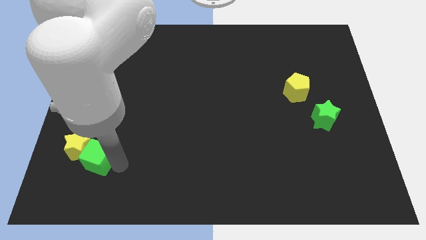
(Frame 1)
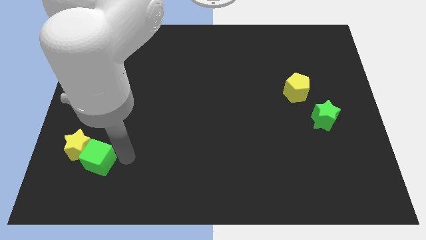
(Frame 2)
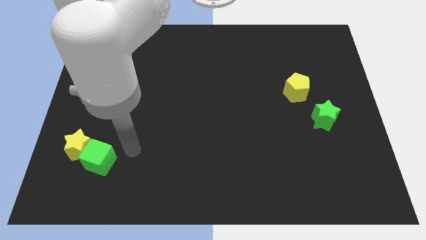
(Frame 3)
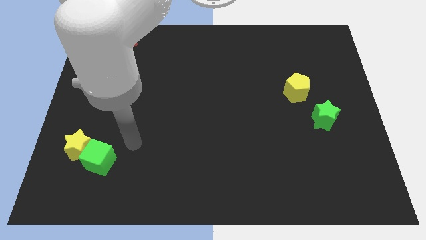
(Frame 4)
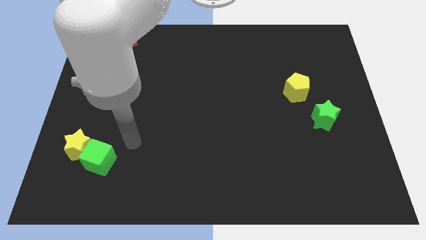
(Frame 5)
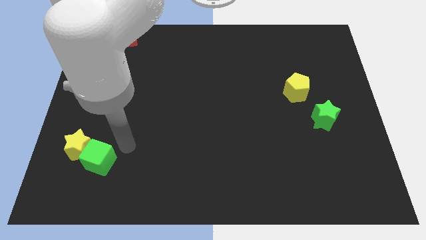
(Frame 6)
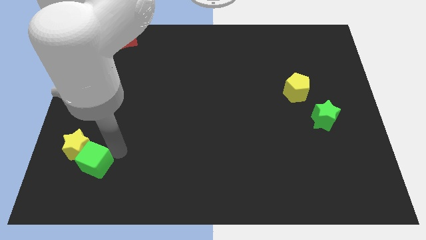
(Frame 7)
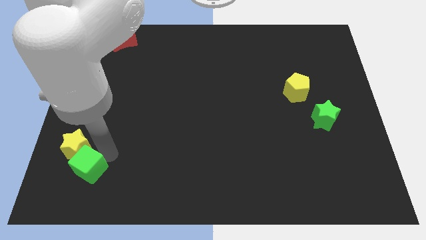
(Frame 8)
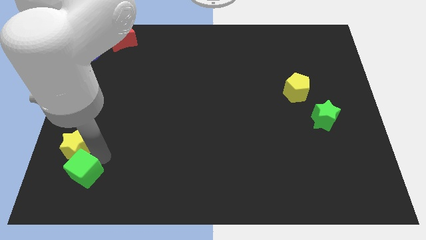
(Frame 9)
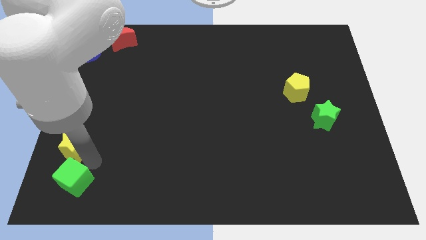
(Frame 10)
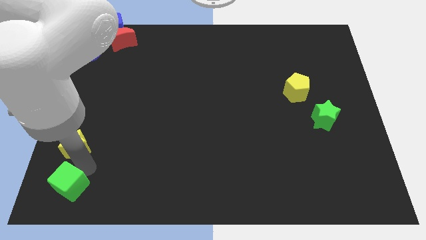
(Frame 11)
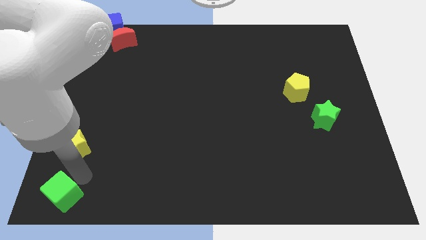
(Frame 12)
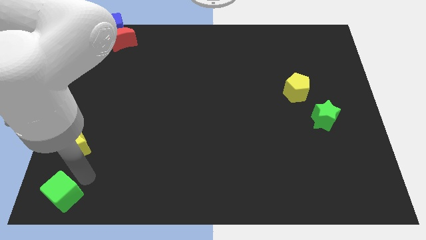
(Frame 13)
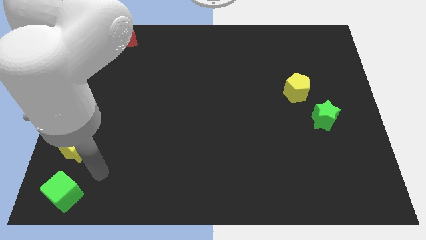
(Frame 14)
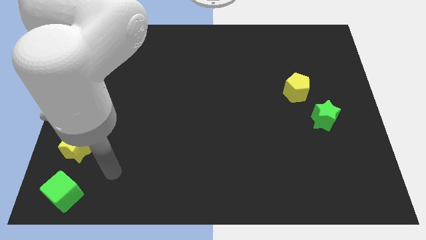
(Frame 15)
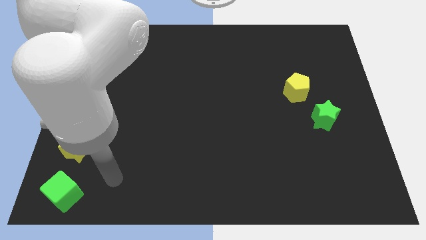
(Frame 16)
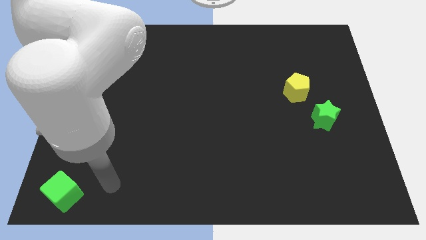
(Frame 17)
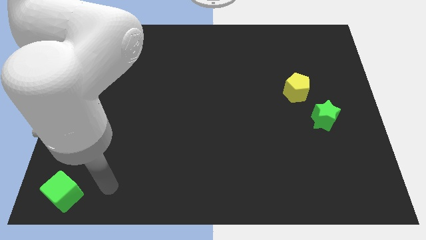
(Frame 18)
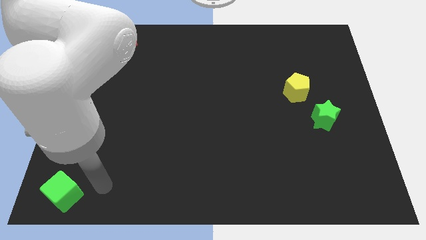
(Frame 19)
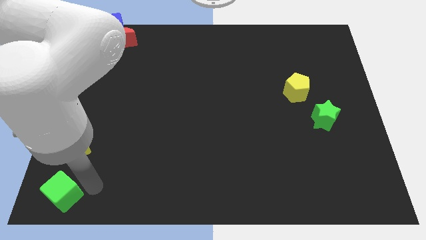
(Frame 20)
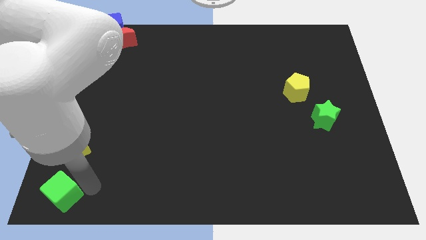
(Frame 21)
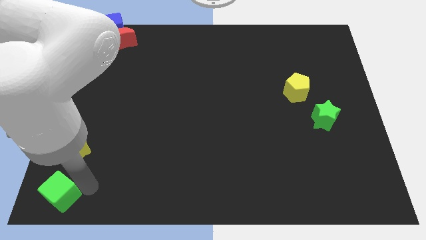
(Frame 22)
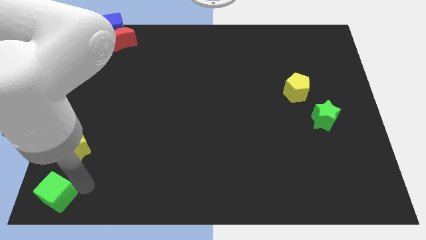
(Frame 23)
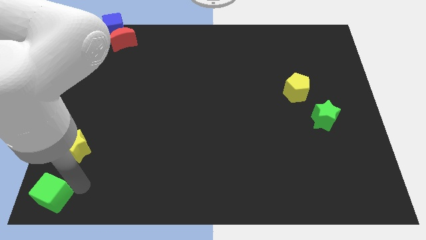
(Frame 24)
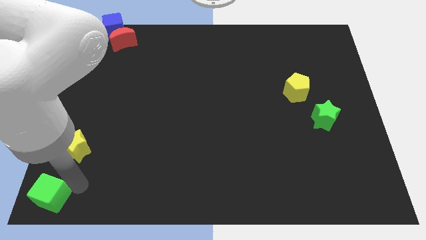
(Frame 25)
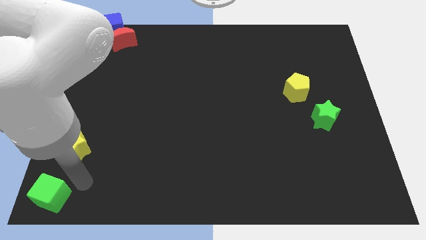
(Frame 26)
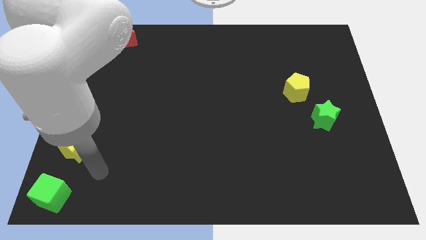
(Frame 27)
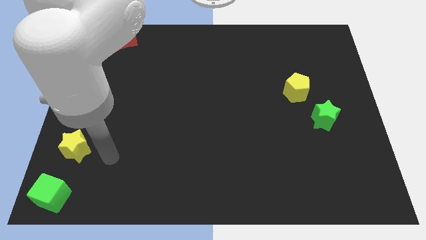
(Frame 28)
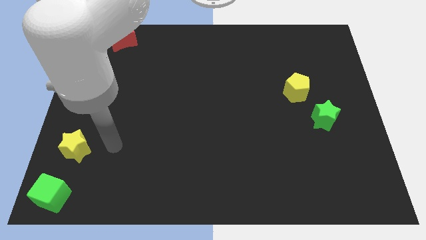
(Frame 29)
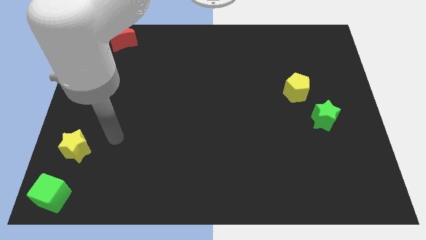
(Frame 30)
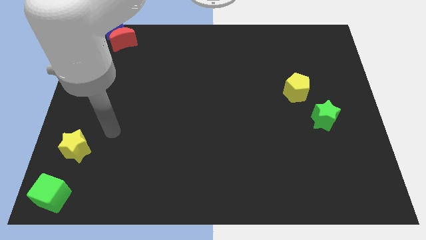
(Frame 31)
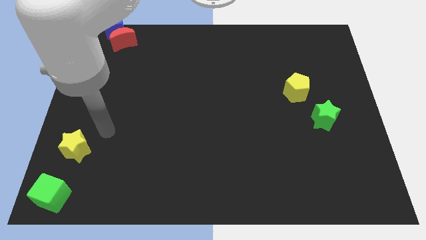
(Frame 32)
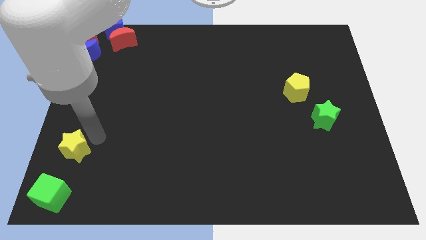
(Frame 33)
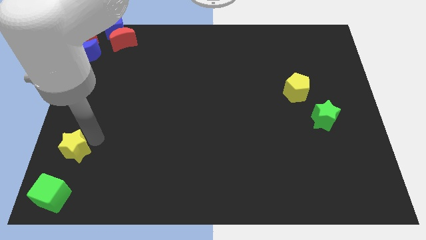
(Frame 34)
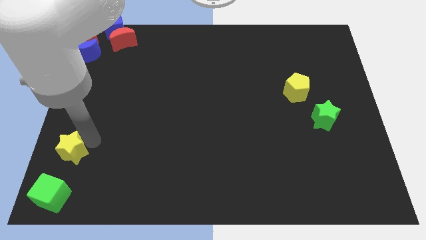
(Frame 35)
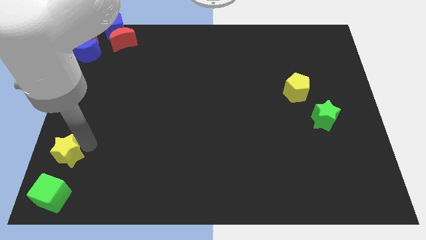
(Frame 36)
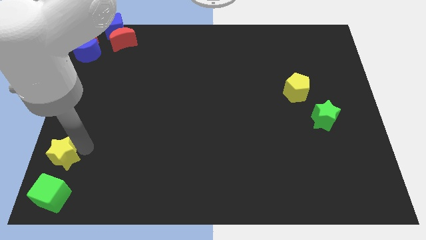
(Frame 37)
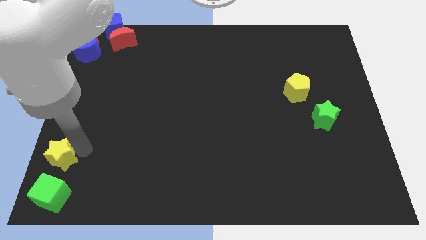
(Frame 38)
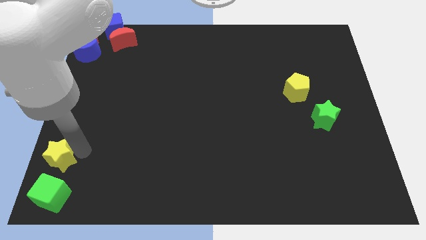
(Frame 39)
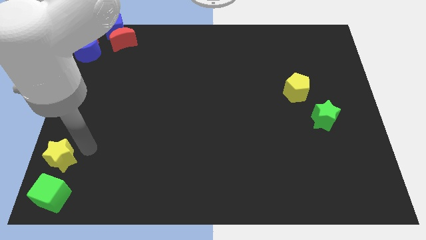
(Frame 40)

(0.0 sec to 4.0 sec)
move the green cube and yellow star to the bottom left of the table

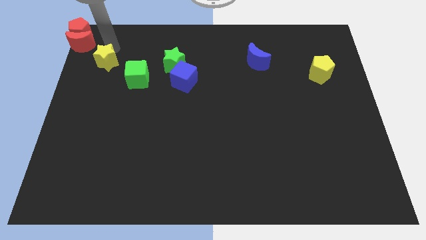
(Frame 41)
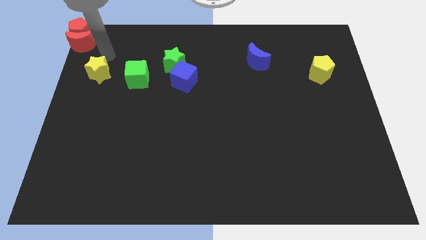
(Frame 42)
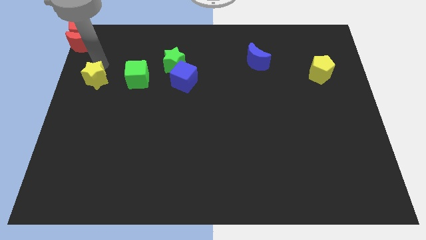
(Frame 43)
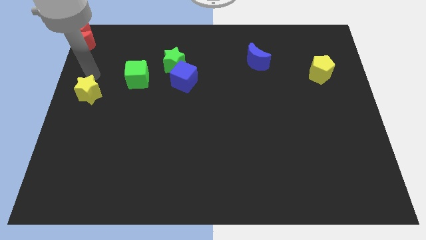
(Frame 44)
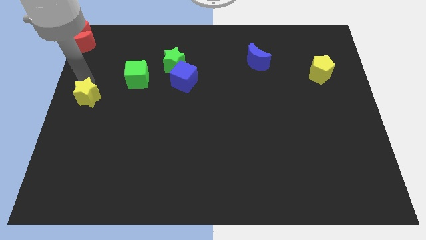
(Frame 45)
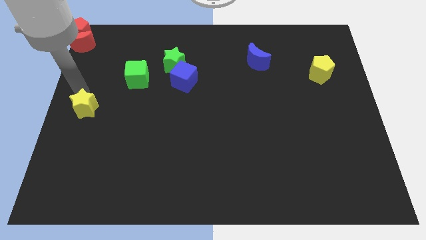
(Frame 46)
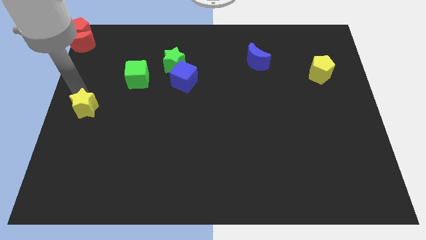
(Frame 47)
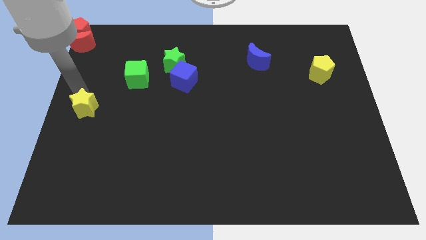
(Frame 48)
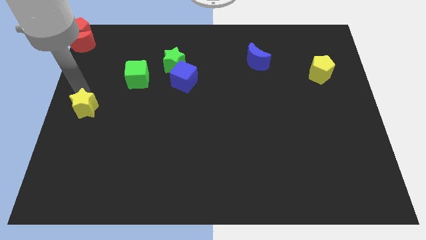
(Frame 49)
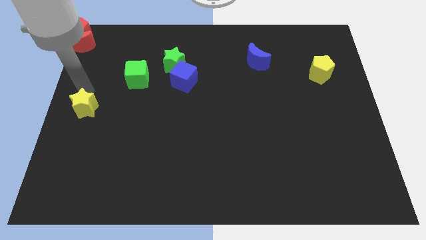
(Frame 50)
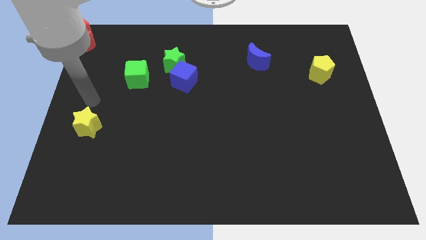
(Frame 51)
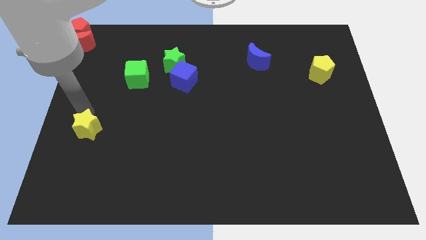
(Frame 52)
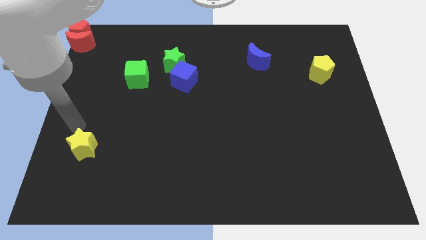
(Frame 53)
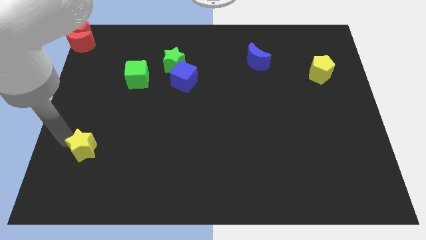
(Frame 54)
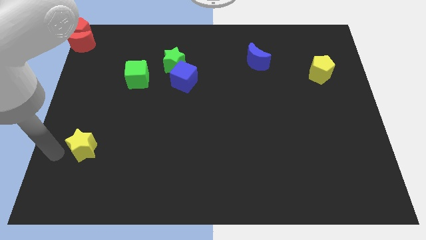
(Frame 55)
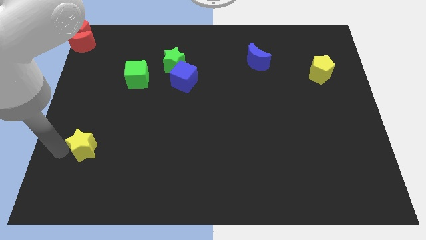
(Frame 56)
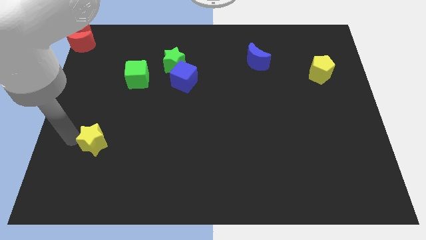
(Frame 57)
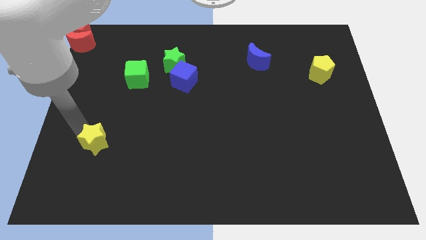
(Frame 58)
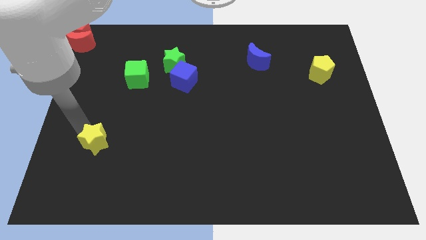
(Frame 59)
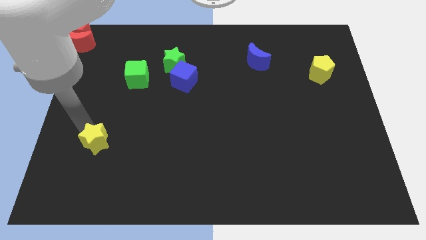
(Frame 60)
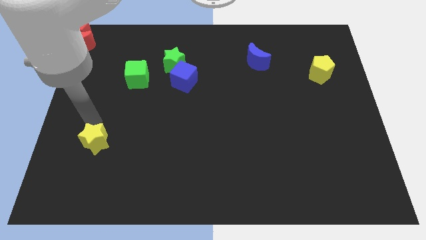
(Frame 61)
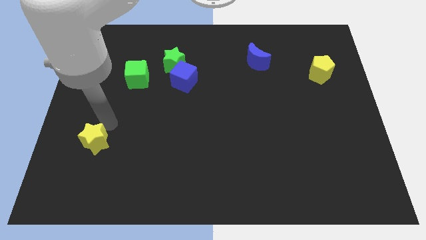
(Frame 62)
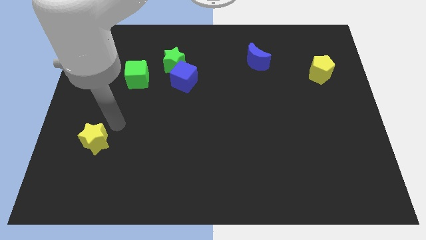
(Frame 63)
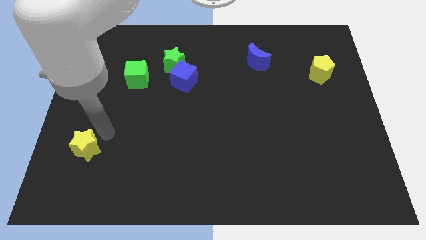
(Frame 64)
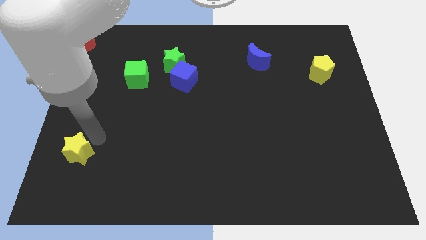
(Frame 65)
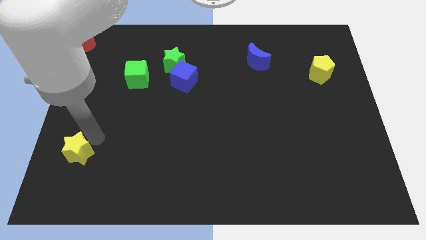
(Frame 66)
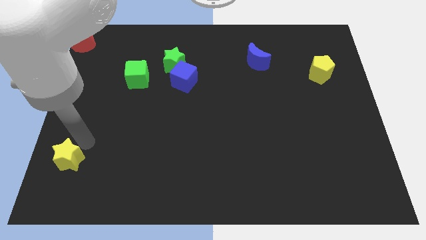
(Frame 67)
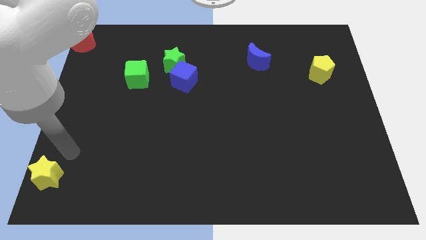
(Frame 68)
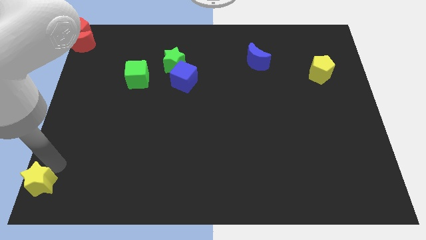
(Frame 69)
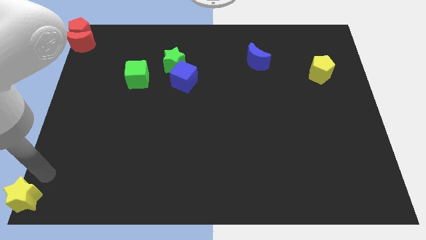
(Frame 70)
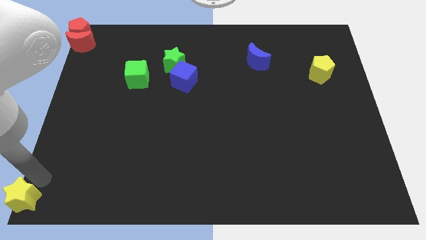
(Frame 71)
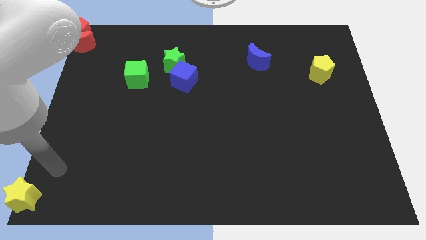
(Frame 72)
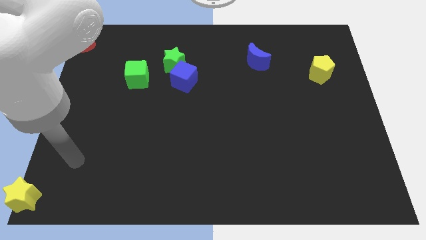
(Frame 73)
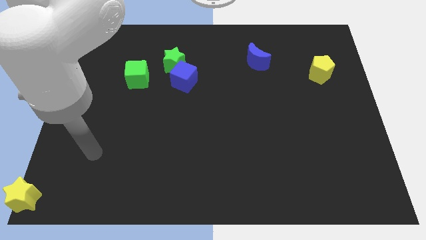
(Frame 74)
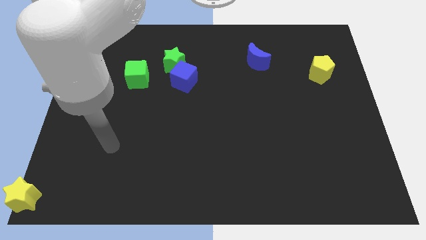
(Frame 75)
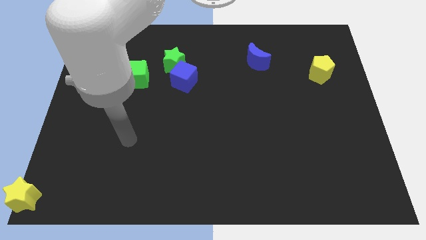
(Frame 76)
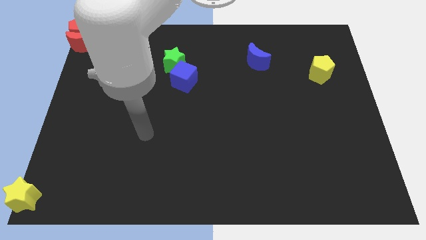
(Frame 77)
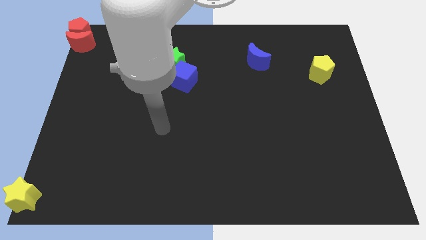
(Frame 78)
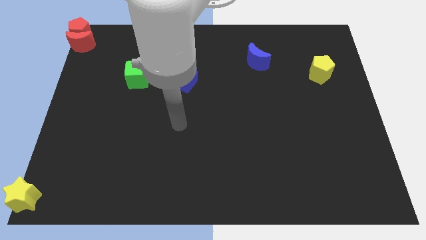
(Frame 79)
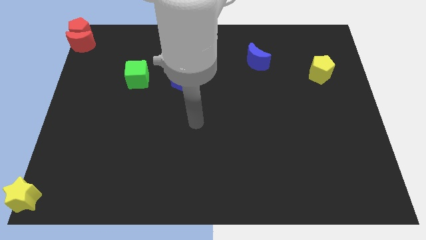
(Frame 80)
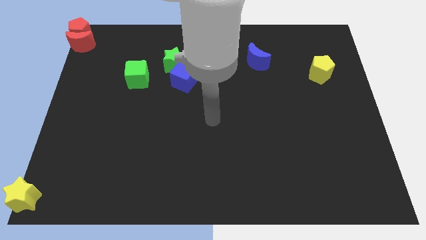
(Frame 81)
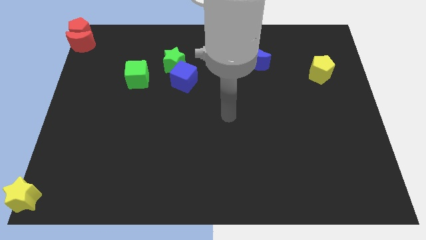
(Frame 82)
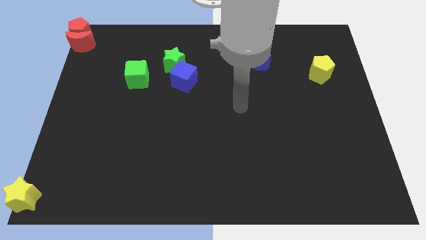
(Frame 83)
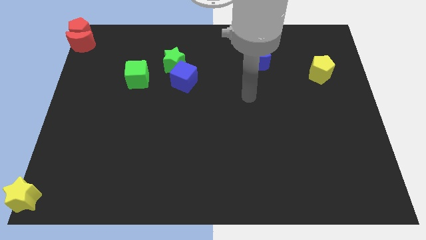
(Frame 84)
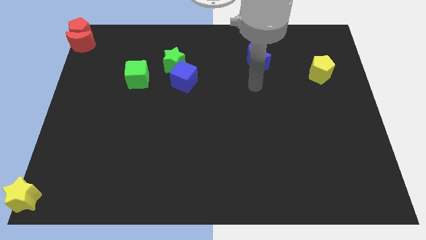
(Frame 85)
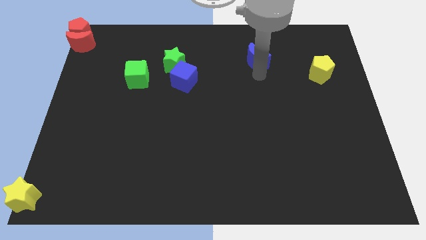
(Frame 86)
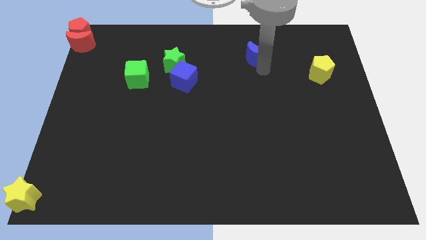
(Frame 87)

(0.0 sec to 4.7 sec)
place a yellow star to the bottom left corner of the board

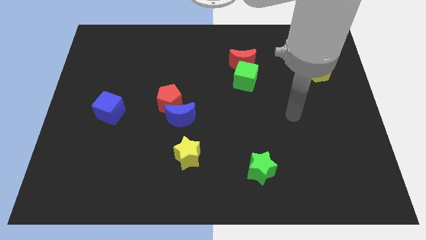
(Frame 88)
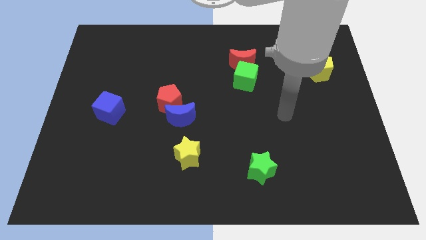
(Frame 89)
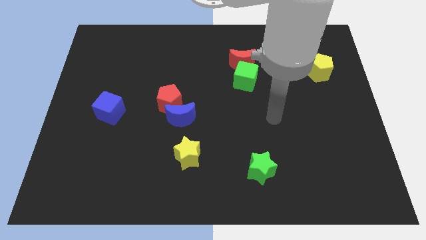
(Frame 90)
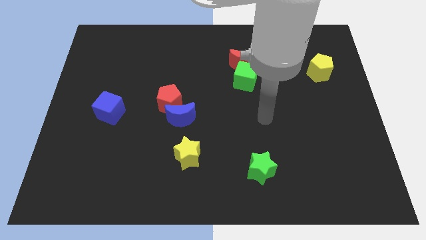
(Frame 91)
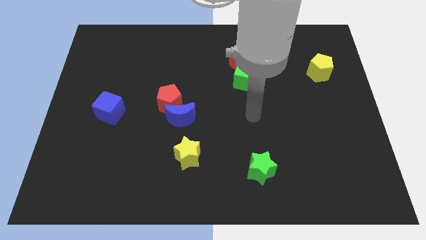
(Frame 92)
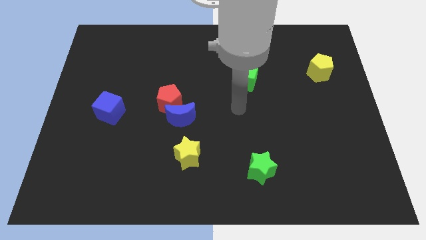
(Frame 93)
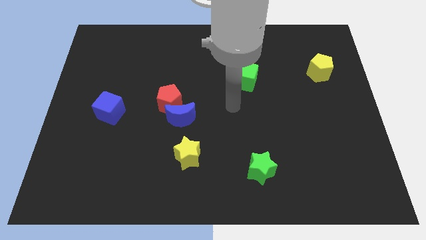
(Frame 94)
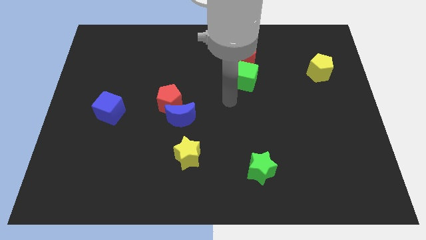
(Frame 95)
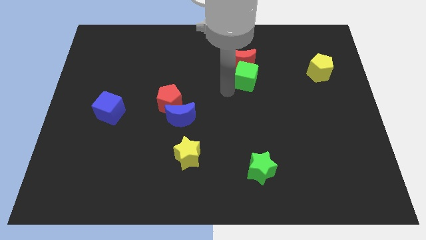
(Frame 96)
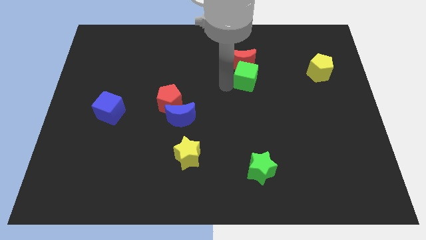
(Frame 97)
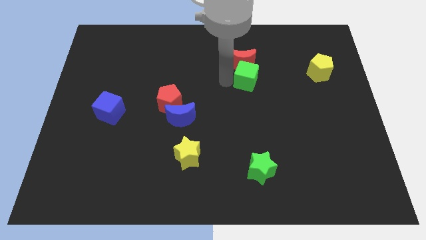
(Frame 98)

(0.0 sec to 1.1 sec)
touch the left side of green cube
